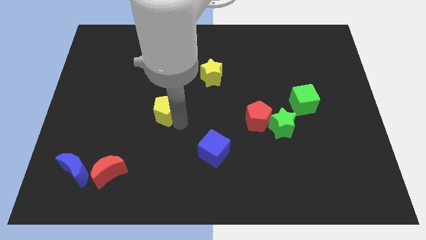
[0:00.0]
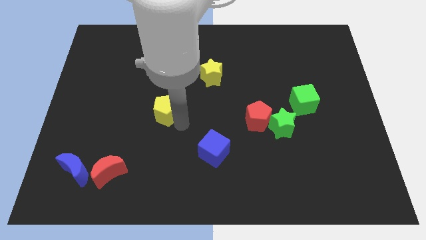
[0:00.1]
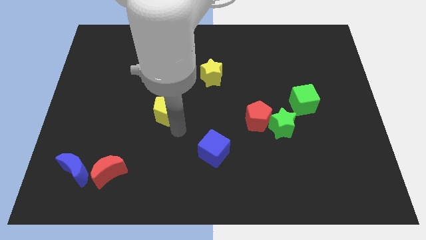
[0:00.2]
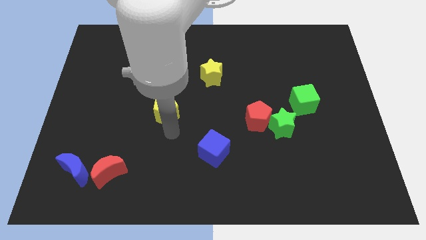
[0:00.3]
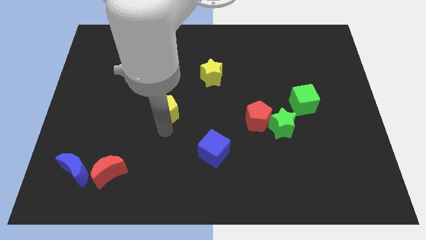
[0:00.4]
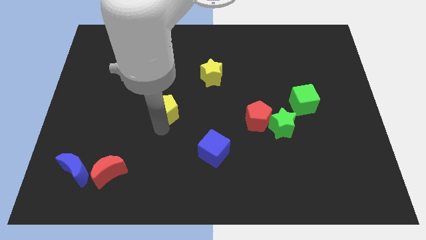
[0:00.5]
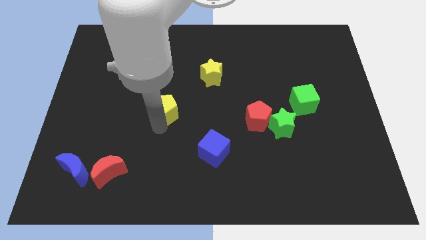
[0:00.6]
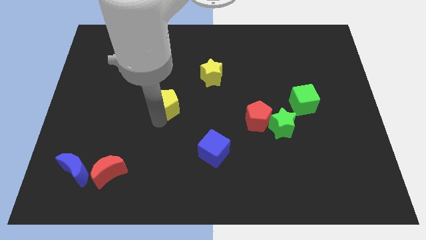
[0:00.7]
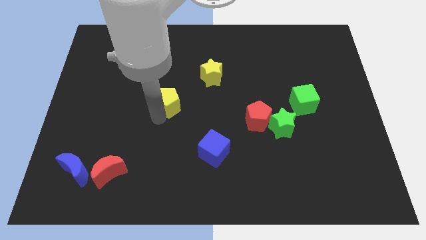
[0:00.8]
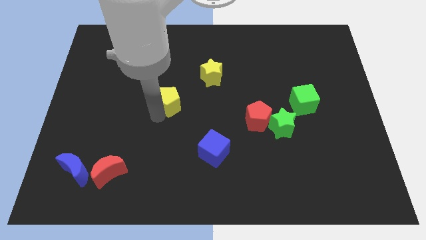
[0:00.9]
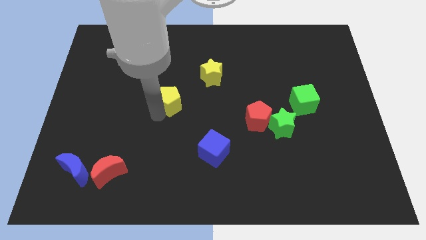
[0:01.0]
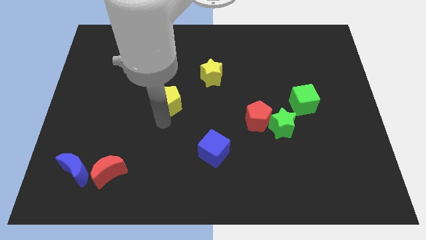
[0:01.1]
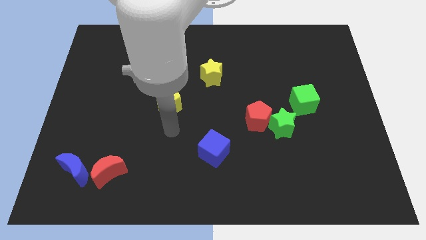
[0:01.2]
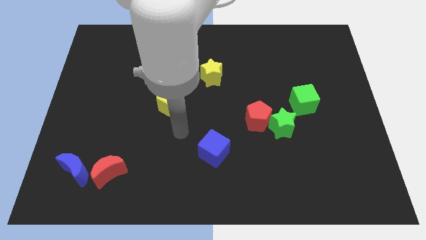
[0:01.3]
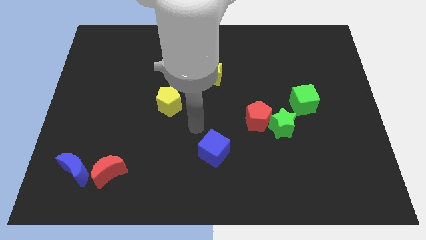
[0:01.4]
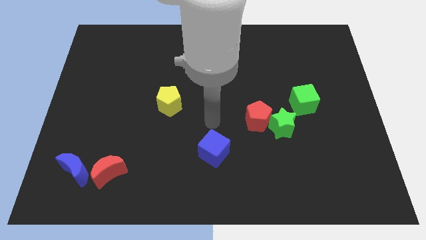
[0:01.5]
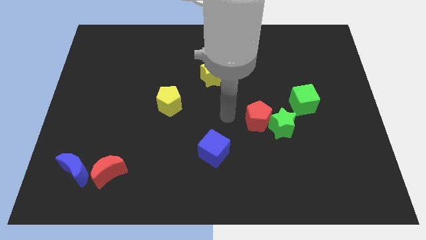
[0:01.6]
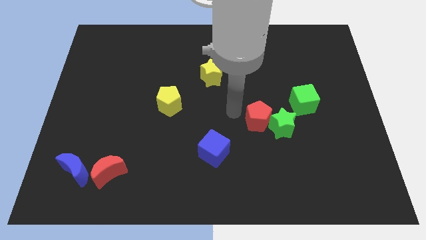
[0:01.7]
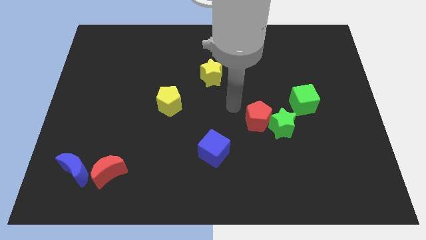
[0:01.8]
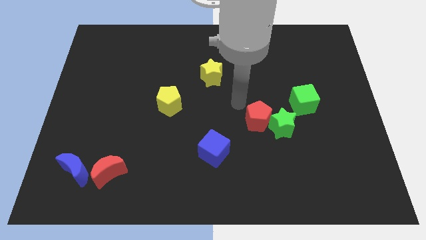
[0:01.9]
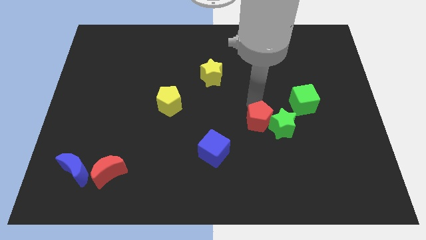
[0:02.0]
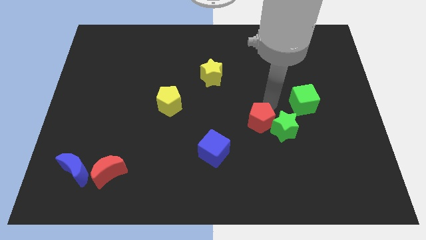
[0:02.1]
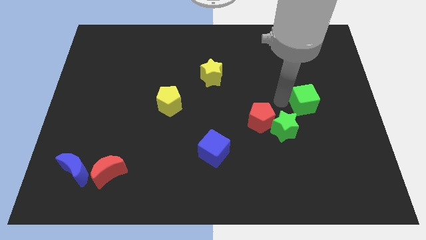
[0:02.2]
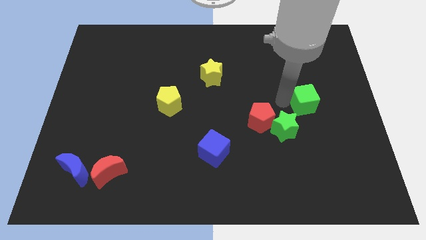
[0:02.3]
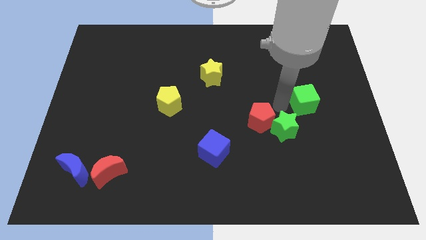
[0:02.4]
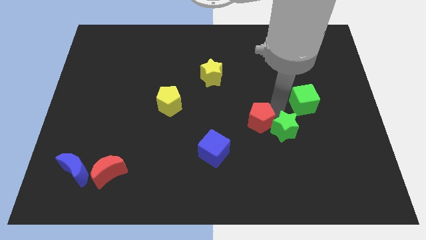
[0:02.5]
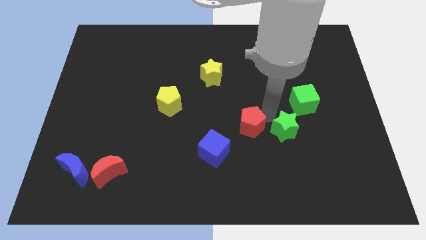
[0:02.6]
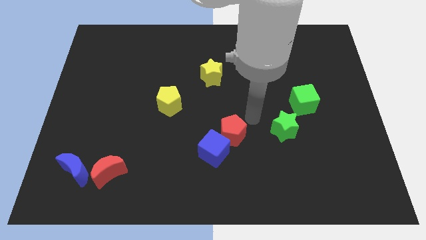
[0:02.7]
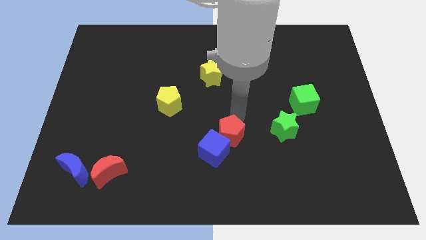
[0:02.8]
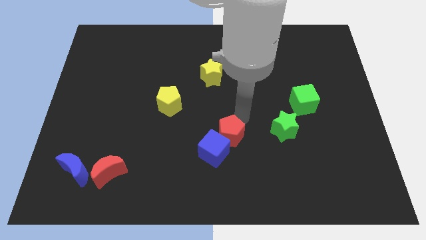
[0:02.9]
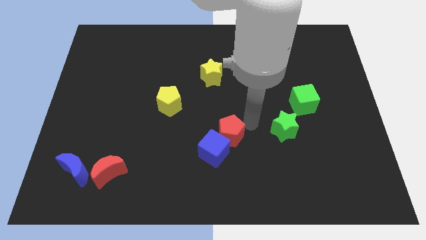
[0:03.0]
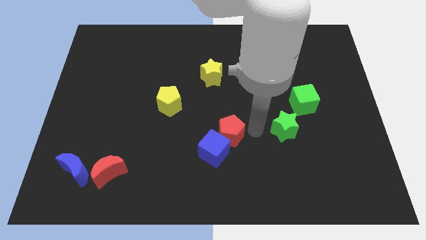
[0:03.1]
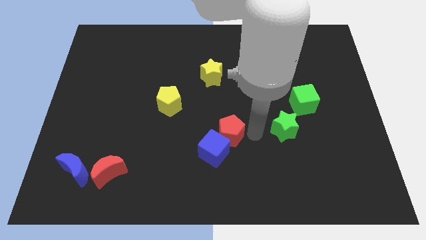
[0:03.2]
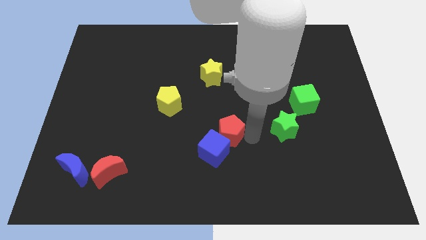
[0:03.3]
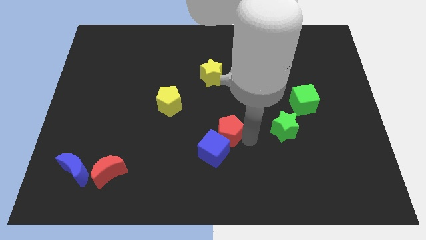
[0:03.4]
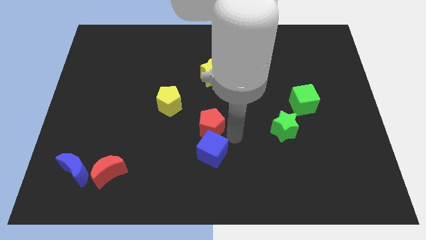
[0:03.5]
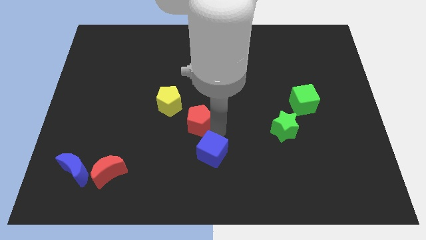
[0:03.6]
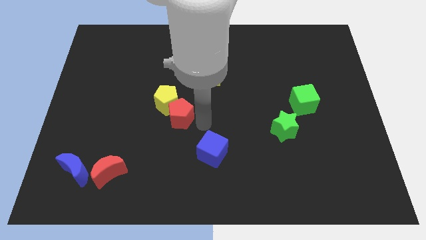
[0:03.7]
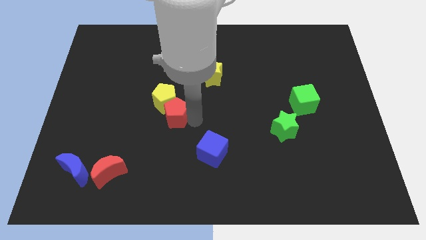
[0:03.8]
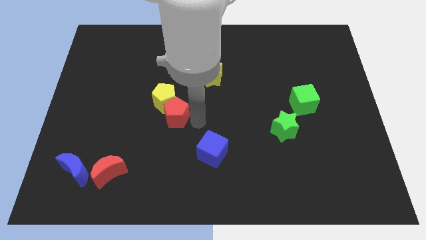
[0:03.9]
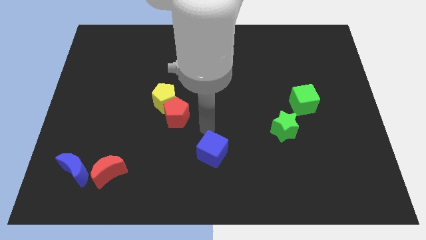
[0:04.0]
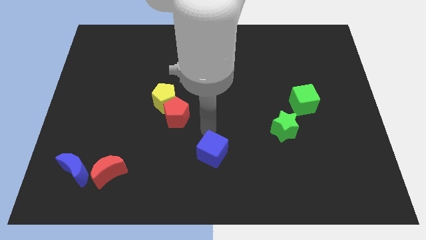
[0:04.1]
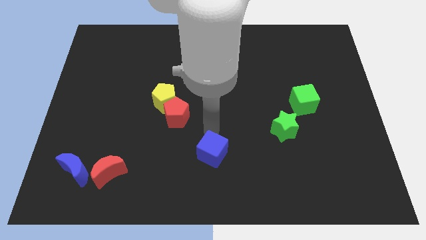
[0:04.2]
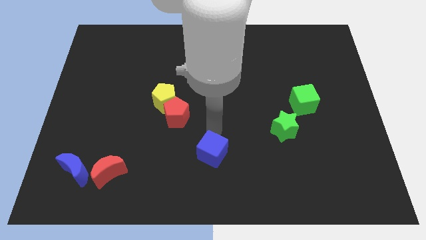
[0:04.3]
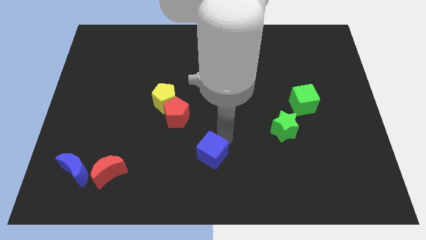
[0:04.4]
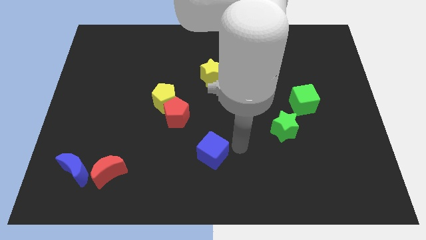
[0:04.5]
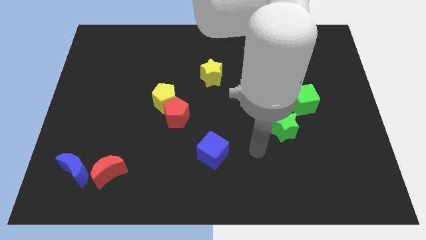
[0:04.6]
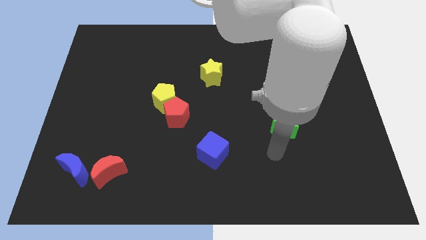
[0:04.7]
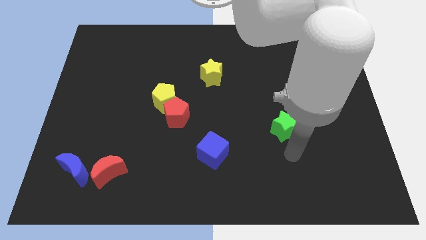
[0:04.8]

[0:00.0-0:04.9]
move the red pentagon into the yellow pentagono

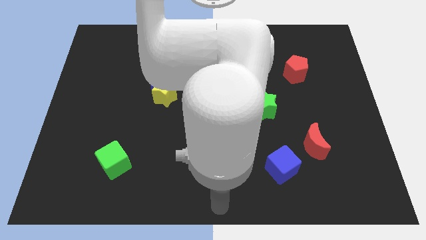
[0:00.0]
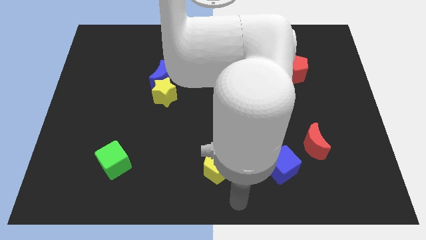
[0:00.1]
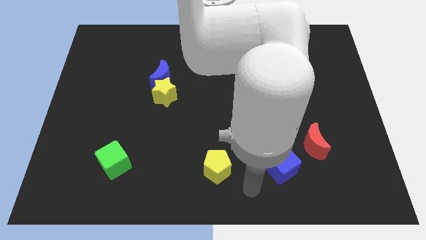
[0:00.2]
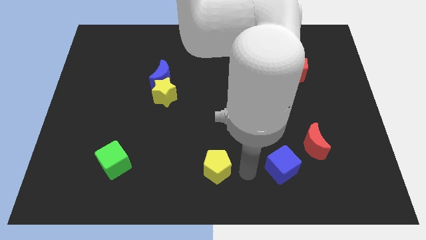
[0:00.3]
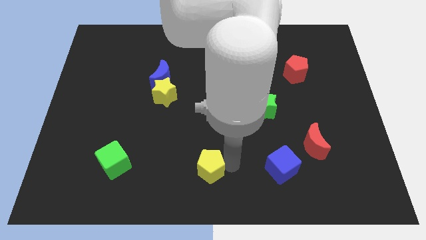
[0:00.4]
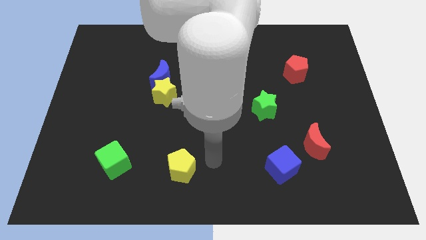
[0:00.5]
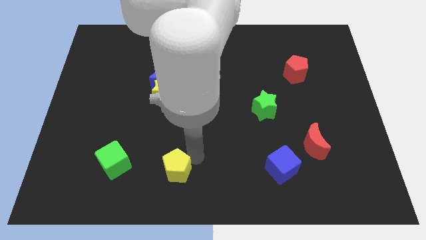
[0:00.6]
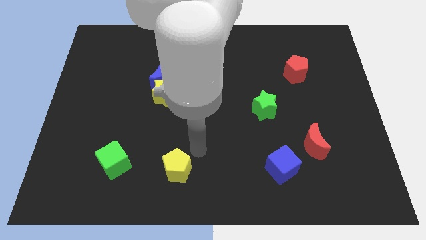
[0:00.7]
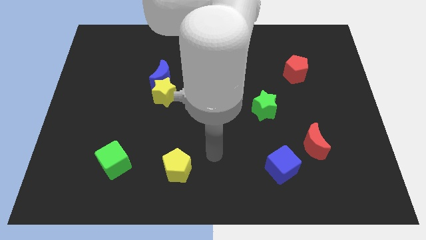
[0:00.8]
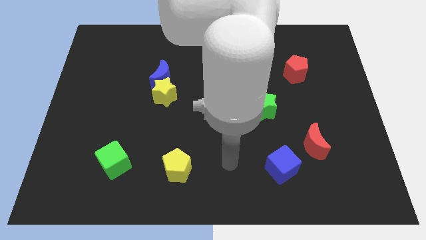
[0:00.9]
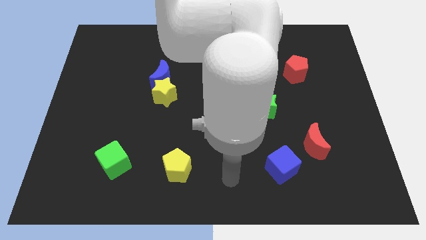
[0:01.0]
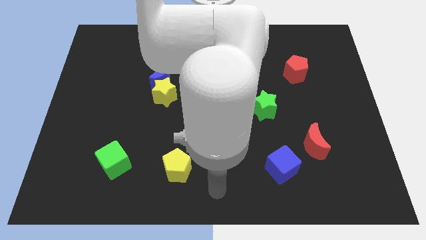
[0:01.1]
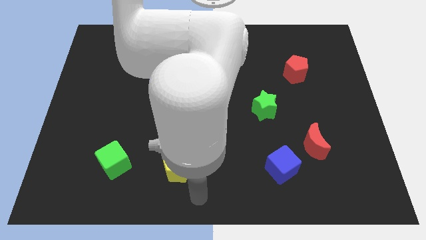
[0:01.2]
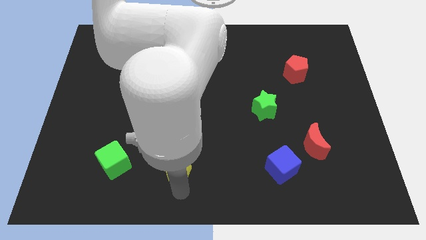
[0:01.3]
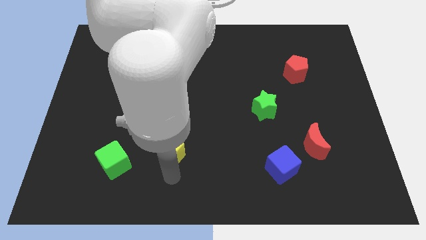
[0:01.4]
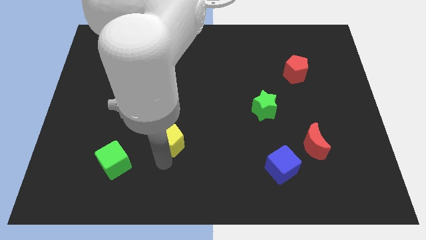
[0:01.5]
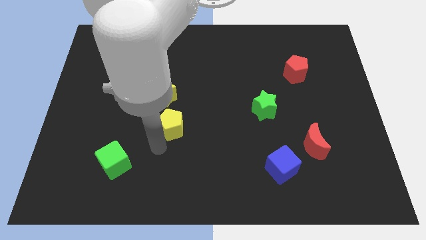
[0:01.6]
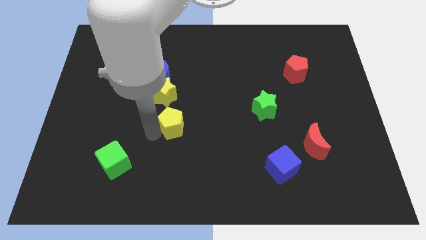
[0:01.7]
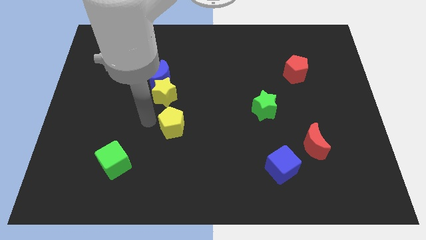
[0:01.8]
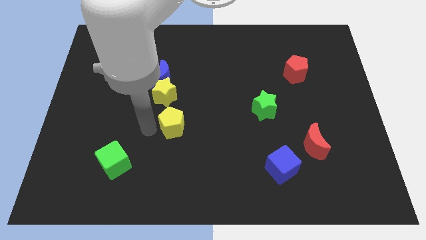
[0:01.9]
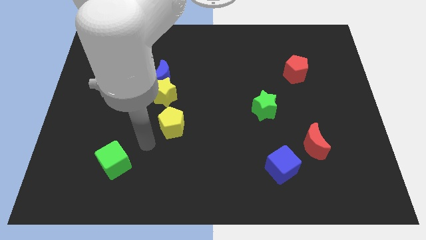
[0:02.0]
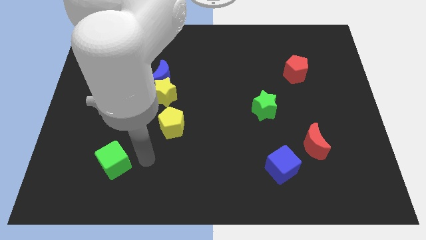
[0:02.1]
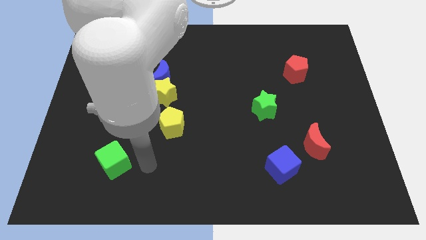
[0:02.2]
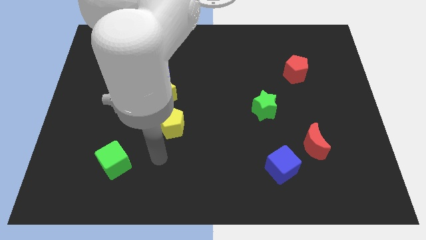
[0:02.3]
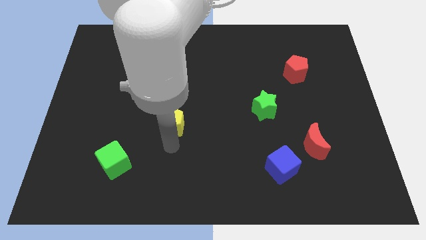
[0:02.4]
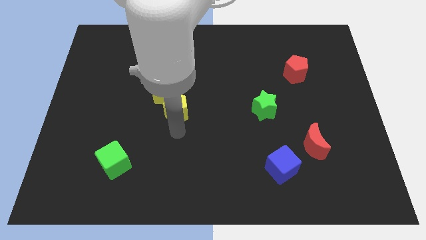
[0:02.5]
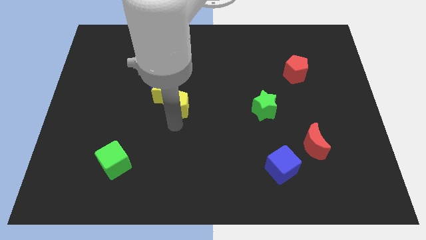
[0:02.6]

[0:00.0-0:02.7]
move the yellow pentagon into yellow star

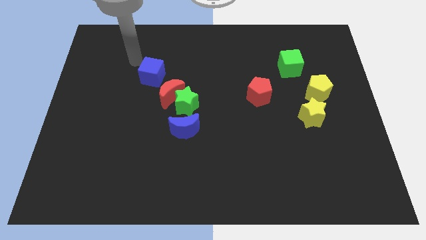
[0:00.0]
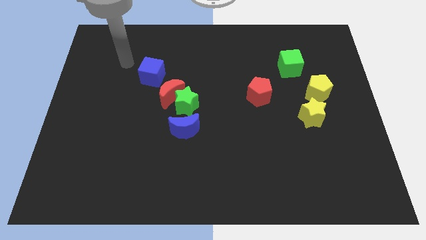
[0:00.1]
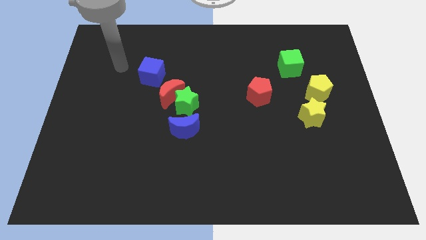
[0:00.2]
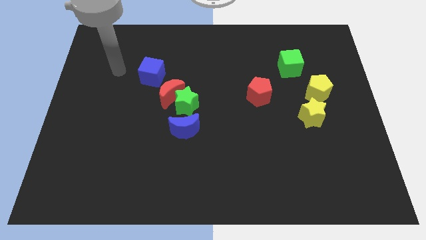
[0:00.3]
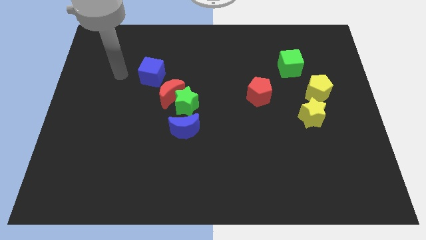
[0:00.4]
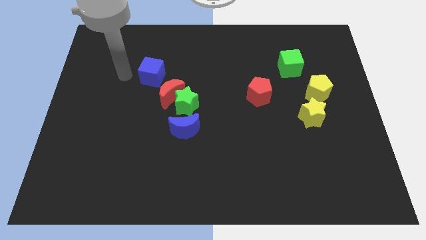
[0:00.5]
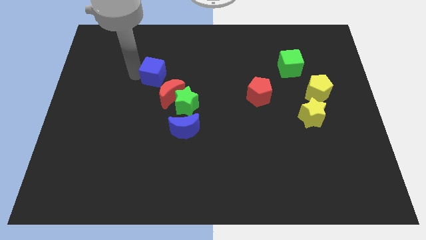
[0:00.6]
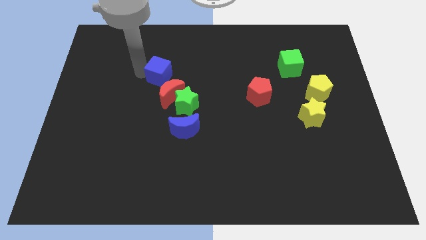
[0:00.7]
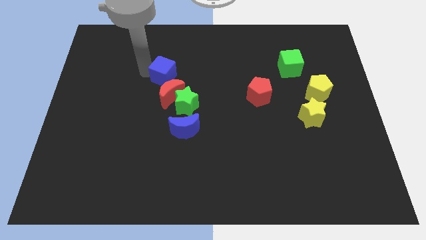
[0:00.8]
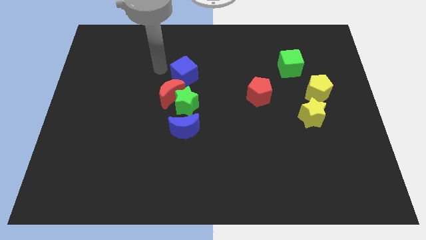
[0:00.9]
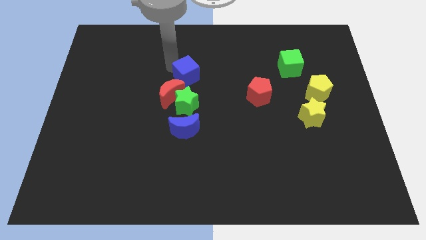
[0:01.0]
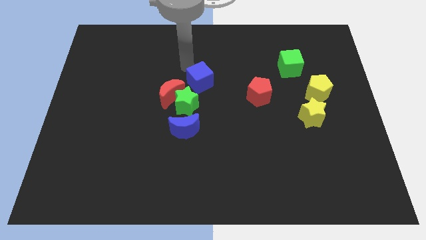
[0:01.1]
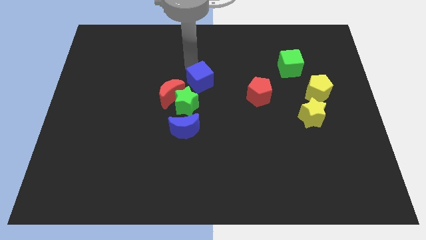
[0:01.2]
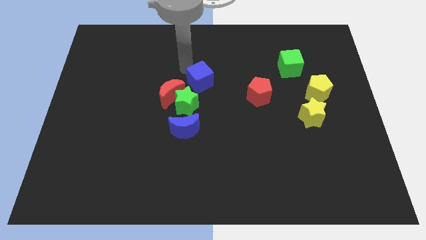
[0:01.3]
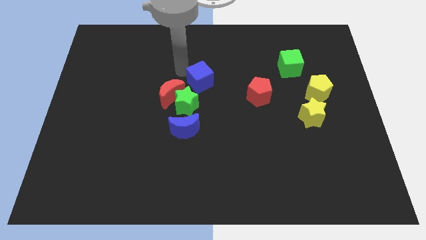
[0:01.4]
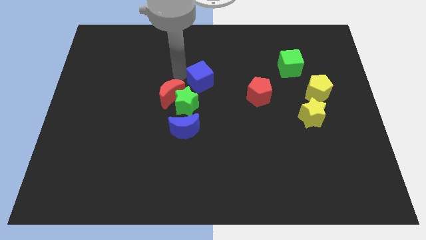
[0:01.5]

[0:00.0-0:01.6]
move the blue cube to the right side
